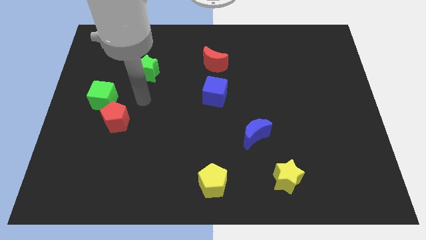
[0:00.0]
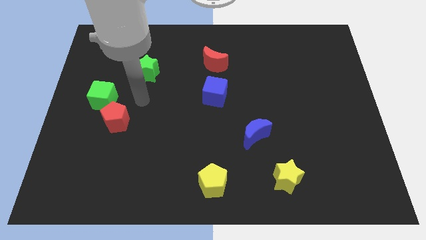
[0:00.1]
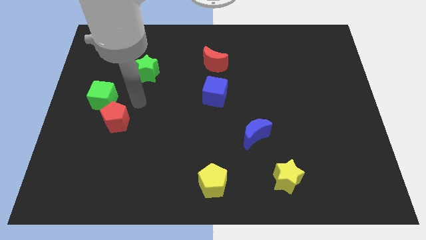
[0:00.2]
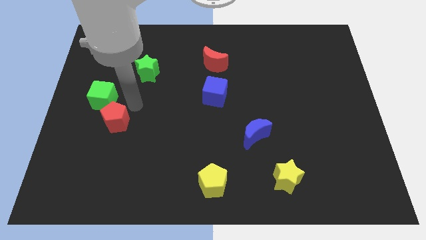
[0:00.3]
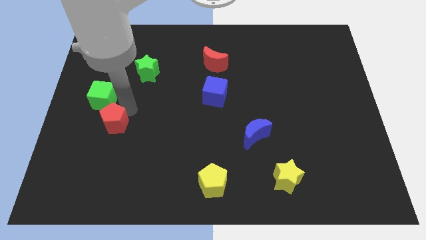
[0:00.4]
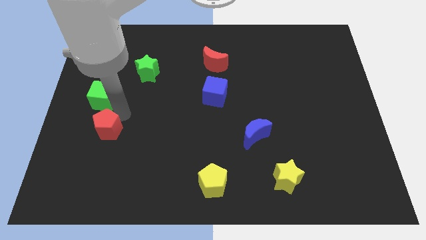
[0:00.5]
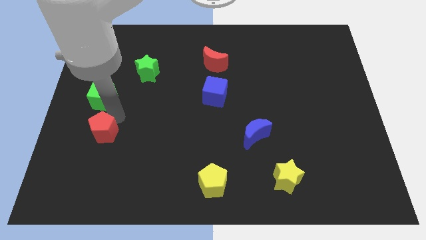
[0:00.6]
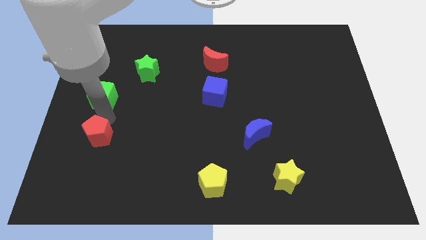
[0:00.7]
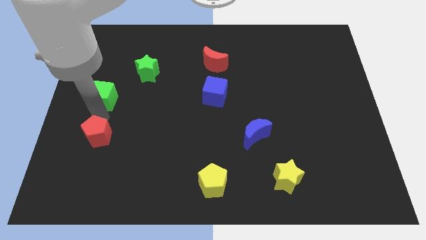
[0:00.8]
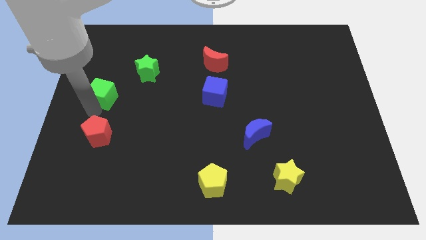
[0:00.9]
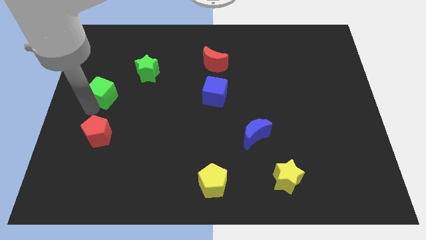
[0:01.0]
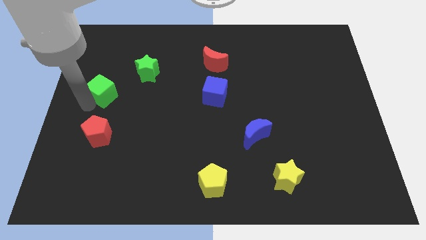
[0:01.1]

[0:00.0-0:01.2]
push the red pentagon below to the green cube

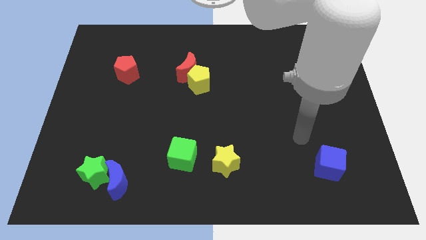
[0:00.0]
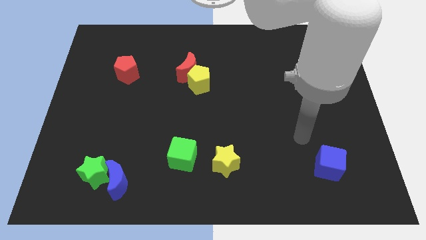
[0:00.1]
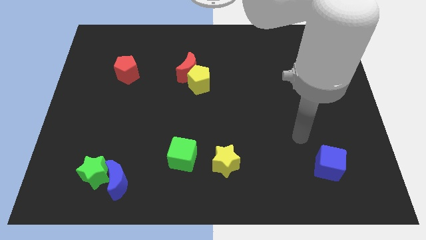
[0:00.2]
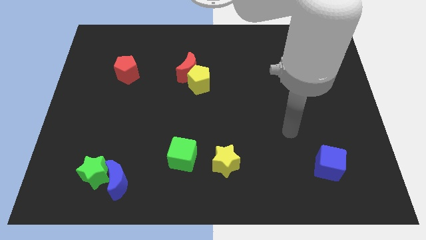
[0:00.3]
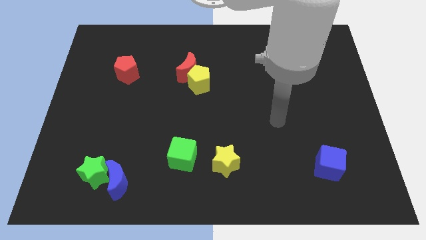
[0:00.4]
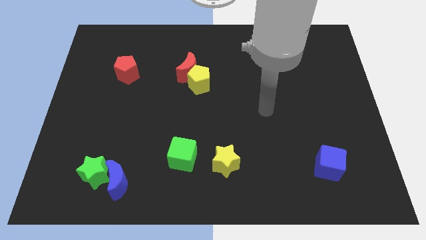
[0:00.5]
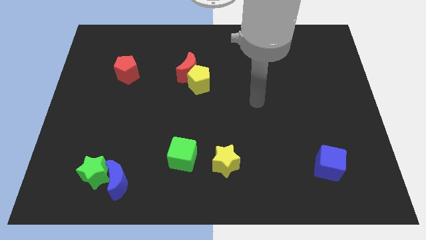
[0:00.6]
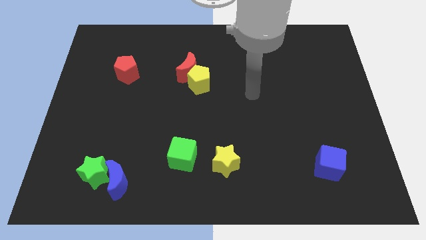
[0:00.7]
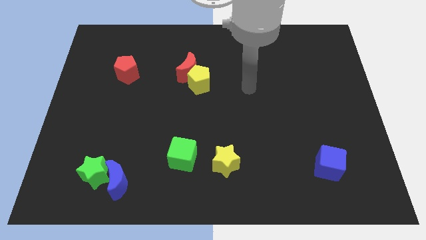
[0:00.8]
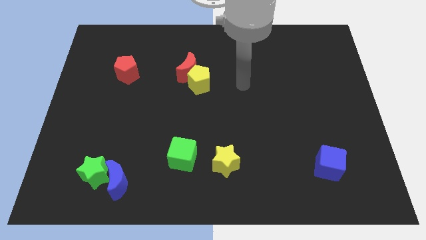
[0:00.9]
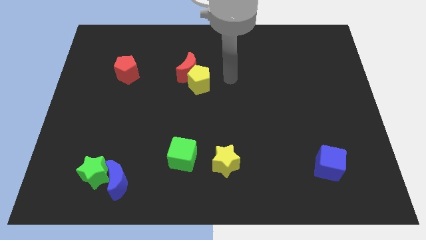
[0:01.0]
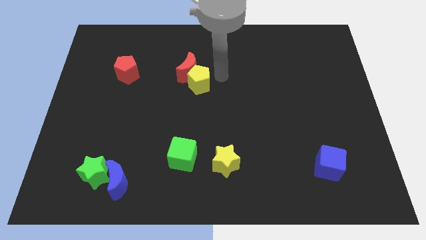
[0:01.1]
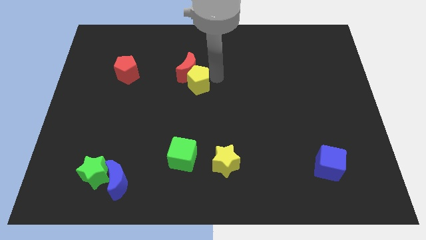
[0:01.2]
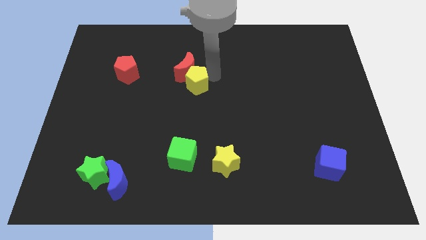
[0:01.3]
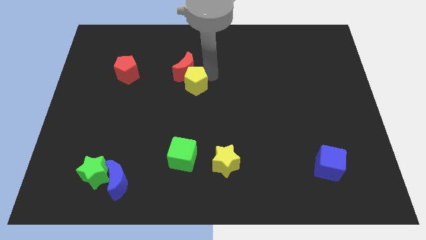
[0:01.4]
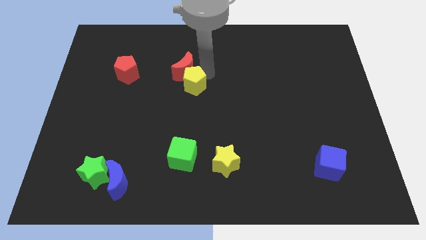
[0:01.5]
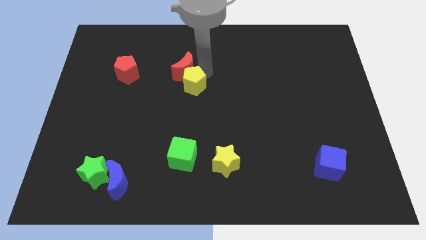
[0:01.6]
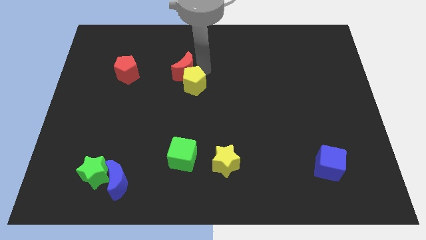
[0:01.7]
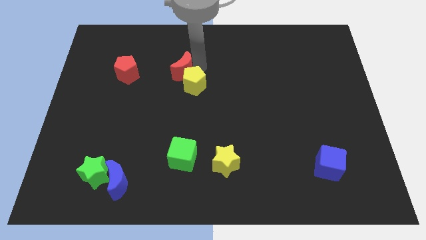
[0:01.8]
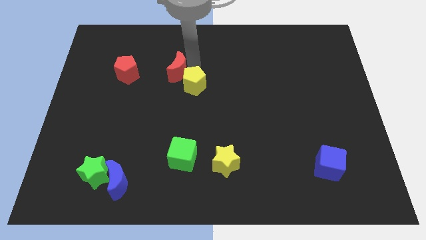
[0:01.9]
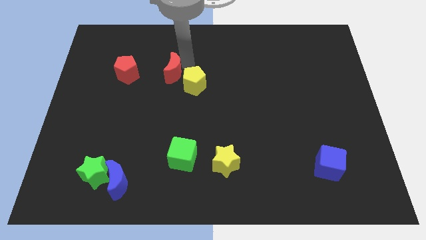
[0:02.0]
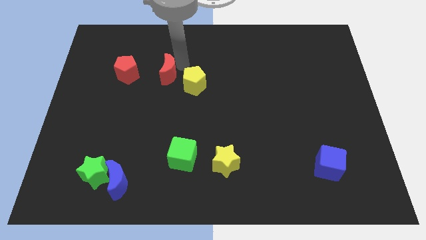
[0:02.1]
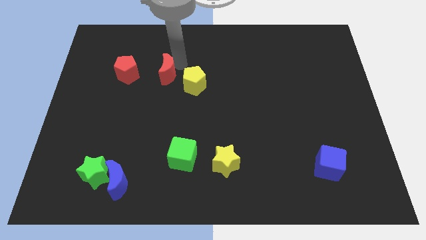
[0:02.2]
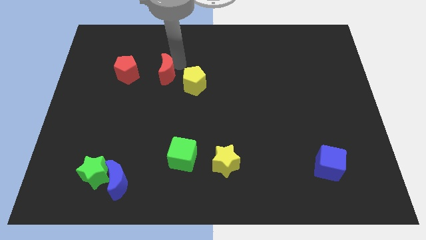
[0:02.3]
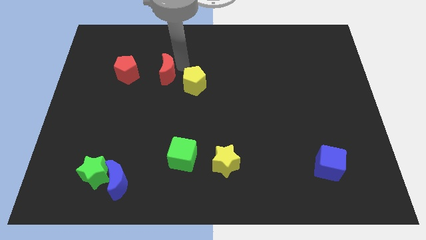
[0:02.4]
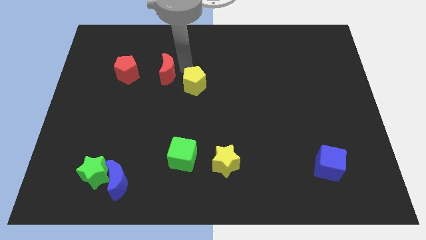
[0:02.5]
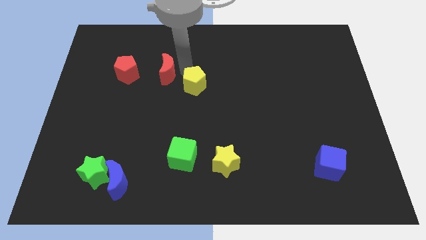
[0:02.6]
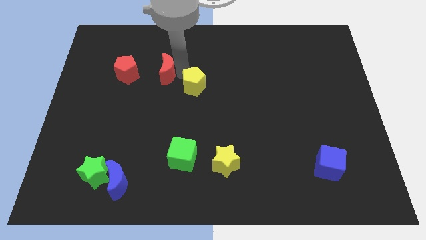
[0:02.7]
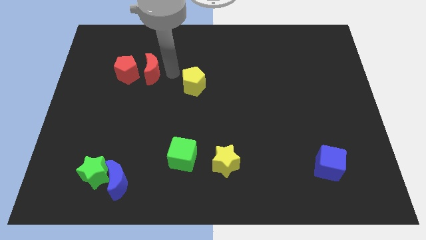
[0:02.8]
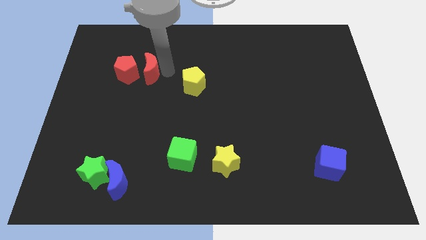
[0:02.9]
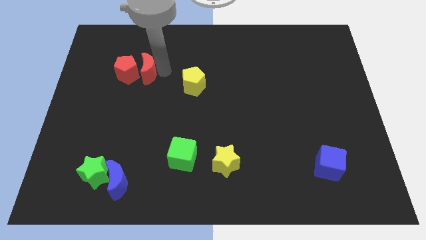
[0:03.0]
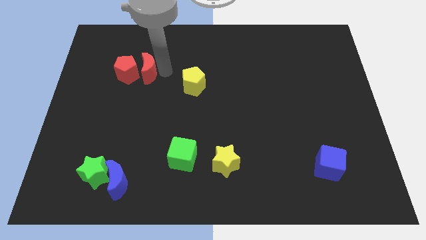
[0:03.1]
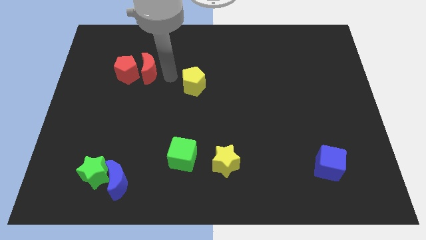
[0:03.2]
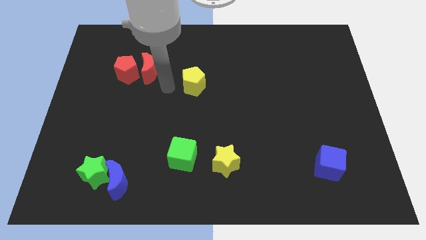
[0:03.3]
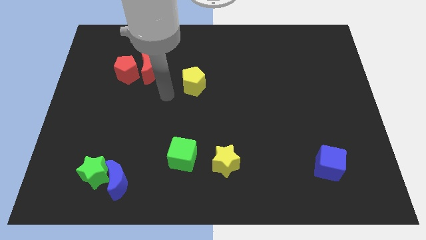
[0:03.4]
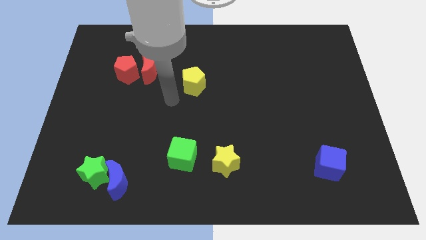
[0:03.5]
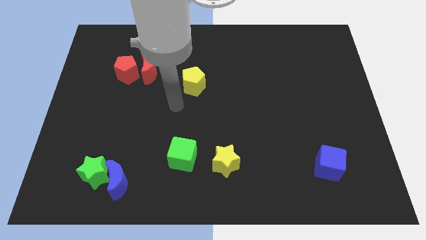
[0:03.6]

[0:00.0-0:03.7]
push the red moon to the right side of the red pentagon

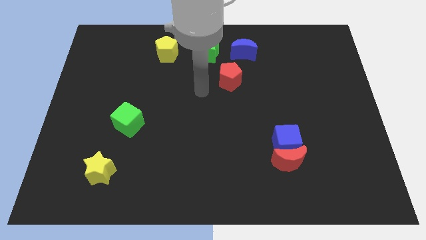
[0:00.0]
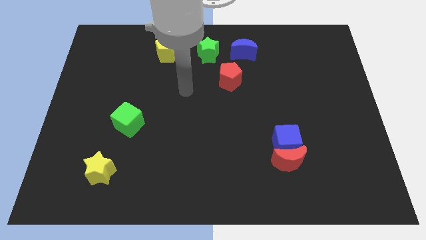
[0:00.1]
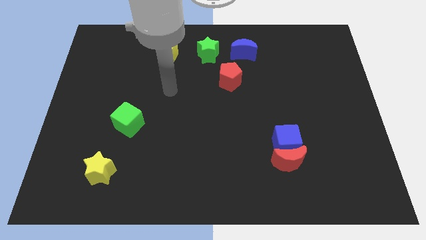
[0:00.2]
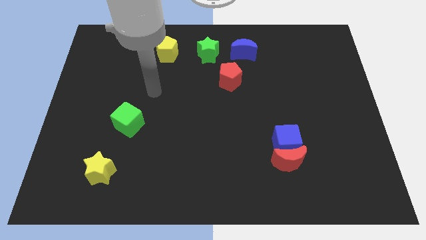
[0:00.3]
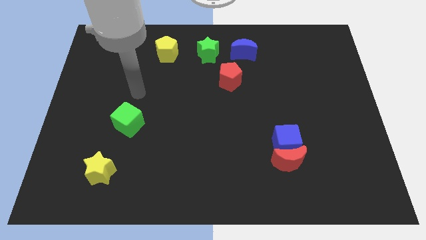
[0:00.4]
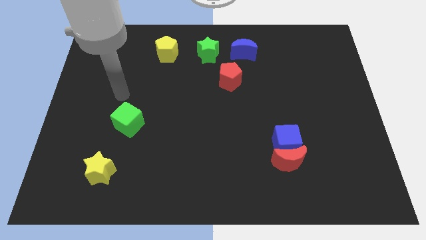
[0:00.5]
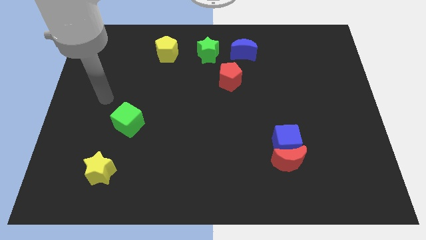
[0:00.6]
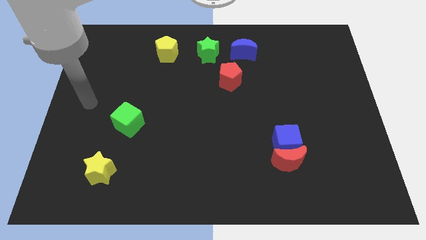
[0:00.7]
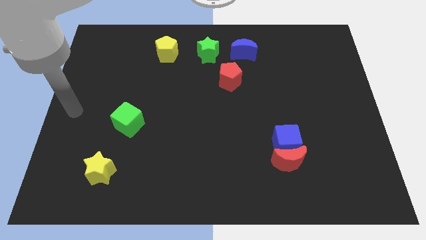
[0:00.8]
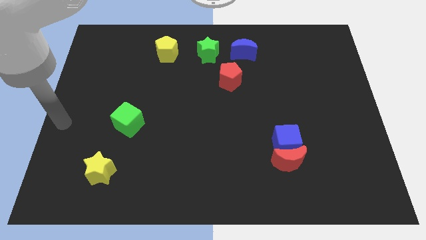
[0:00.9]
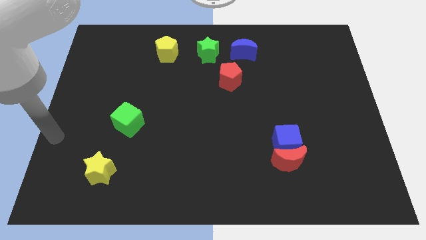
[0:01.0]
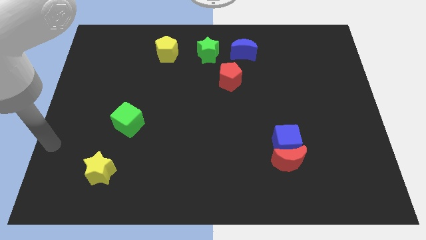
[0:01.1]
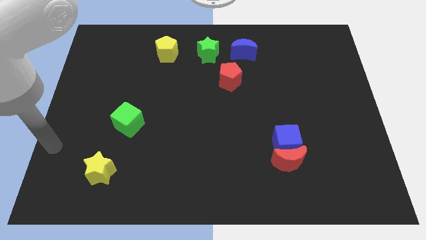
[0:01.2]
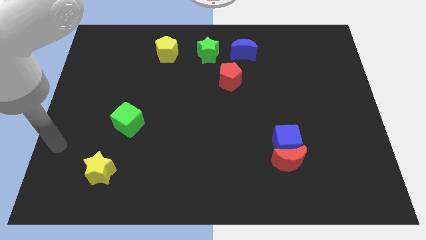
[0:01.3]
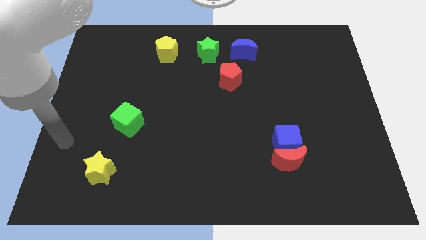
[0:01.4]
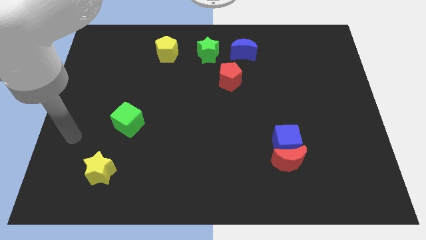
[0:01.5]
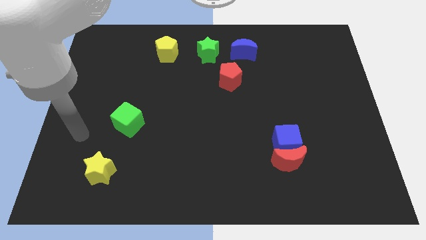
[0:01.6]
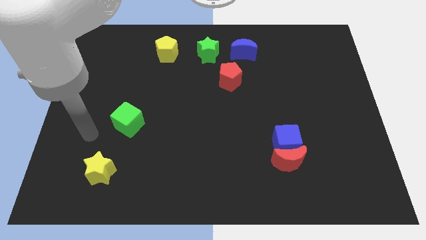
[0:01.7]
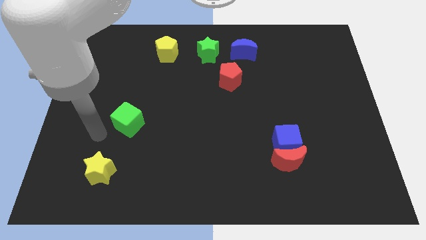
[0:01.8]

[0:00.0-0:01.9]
point your arm at the top of the yellow star

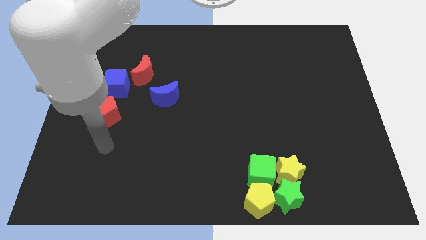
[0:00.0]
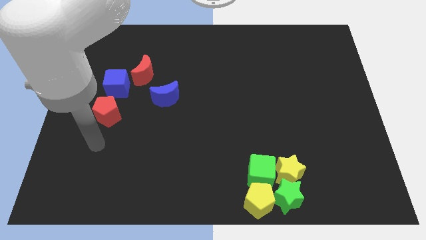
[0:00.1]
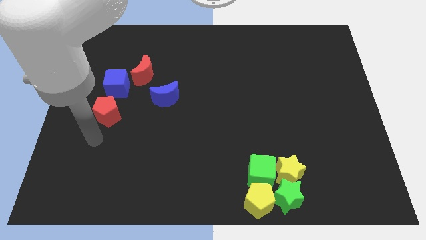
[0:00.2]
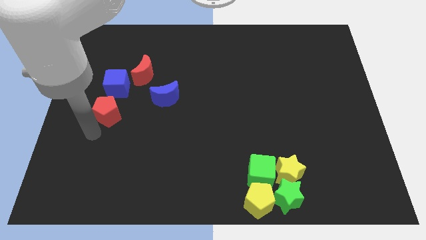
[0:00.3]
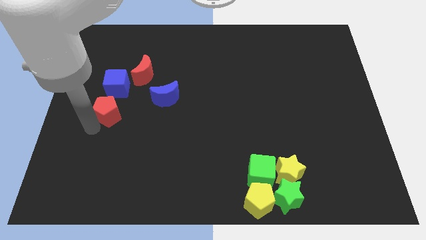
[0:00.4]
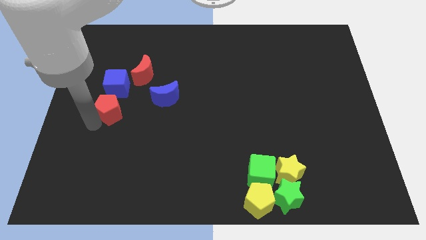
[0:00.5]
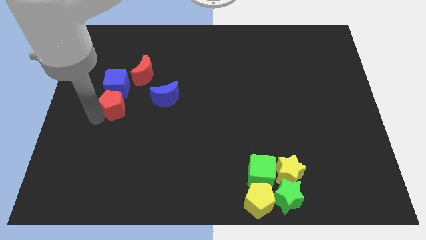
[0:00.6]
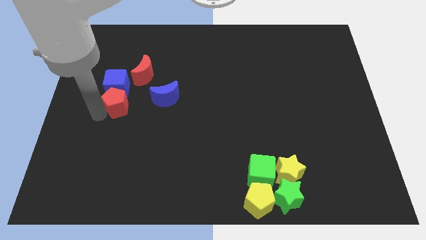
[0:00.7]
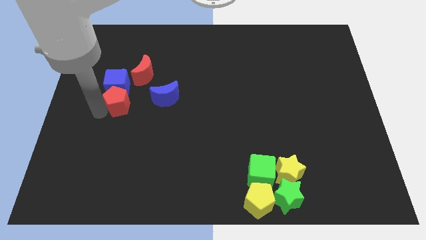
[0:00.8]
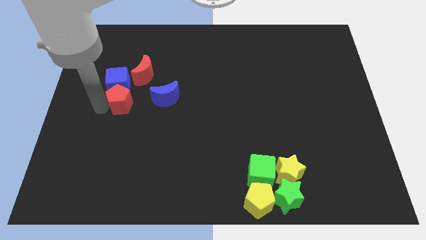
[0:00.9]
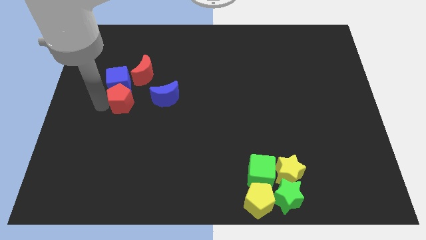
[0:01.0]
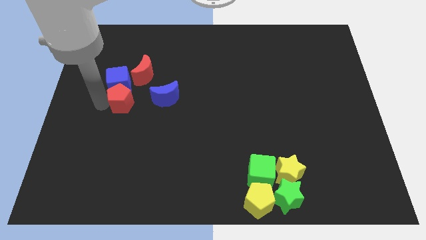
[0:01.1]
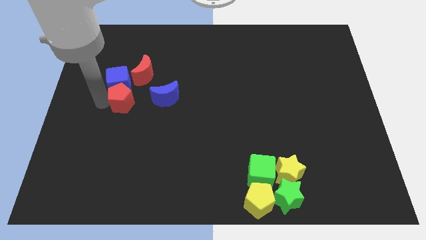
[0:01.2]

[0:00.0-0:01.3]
push the red pentagon into the blue cube

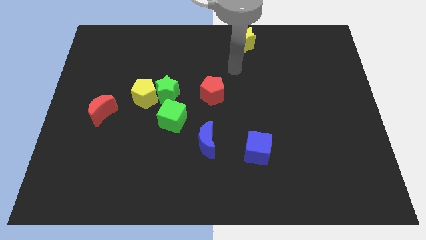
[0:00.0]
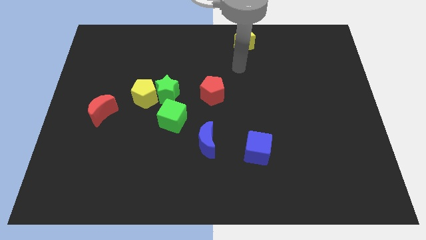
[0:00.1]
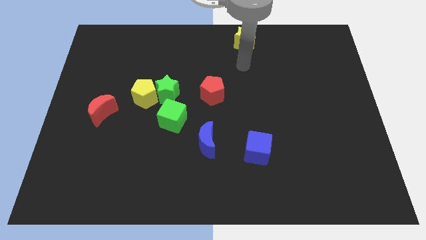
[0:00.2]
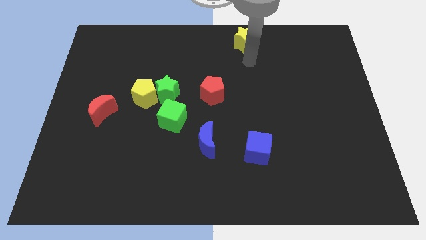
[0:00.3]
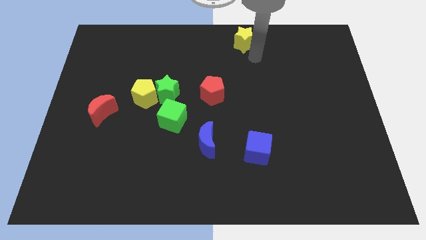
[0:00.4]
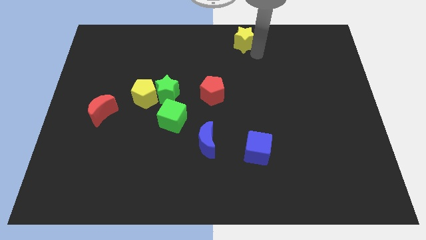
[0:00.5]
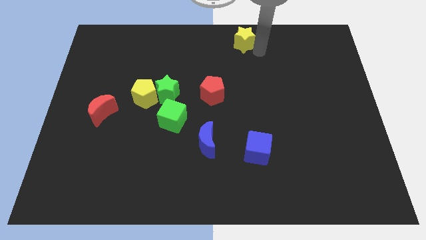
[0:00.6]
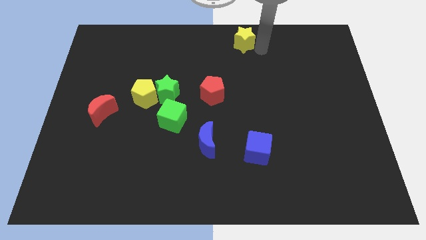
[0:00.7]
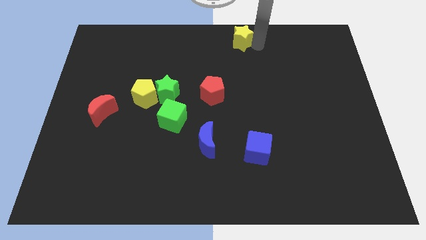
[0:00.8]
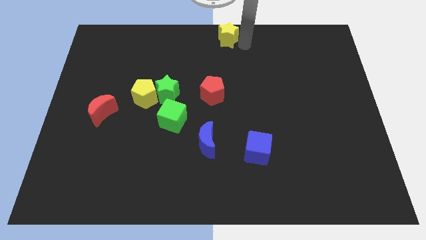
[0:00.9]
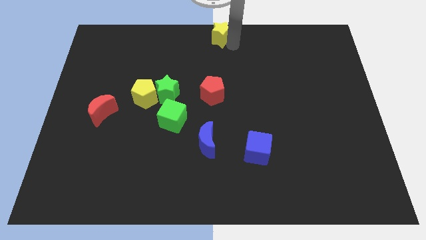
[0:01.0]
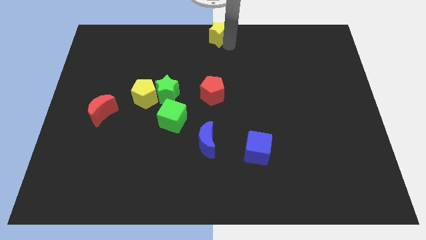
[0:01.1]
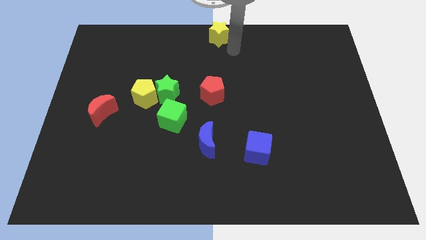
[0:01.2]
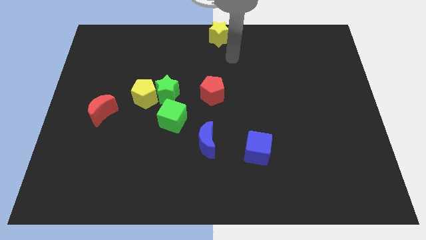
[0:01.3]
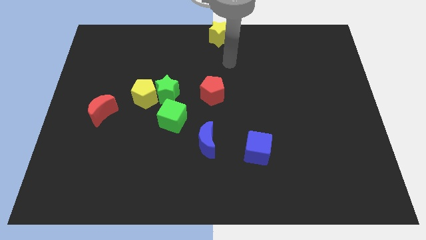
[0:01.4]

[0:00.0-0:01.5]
place the yellow star vertically at the top of the red pentagon
